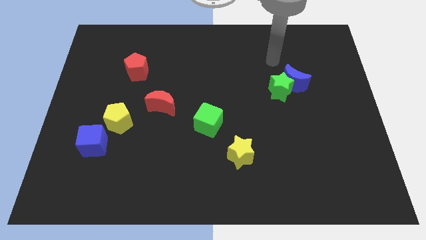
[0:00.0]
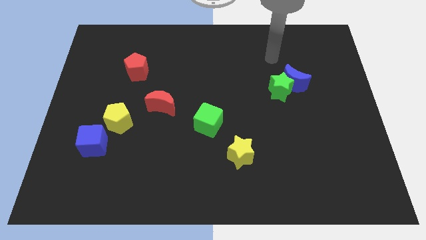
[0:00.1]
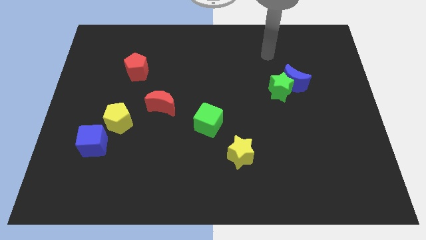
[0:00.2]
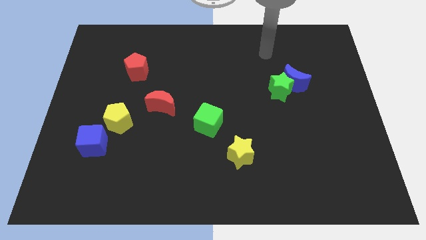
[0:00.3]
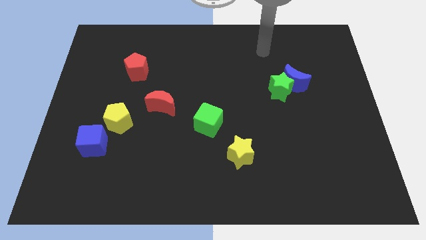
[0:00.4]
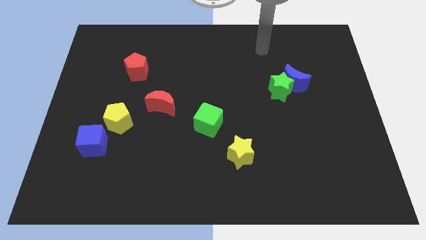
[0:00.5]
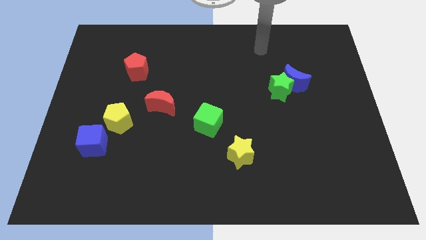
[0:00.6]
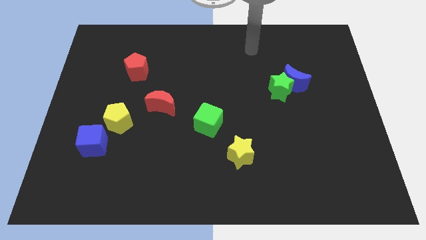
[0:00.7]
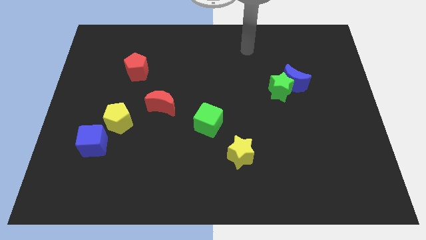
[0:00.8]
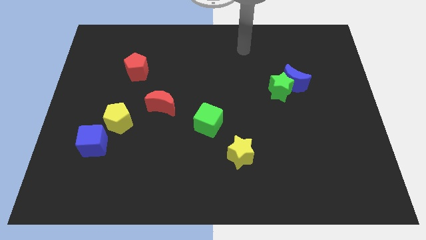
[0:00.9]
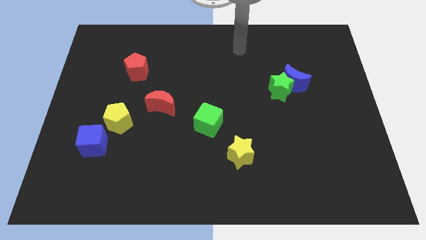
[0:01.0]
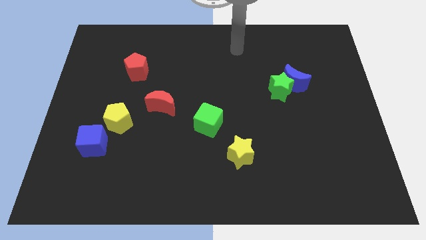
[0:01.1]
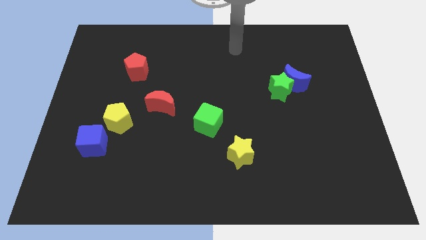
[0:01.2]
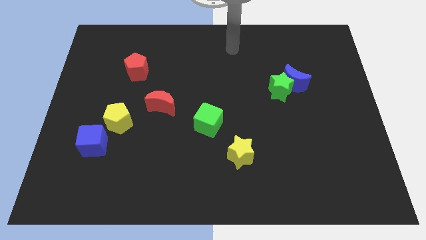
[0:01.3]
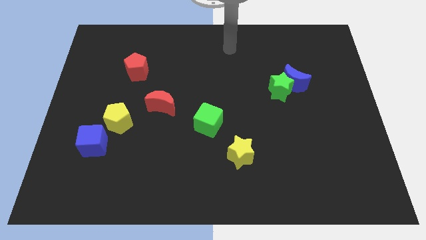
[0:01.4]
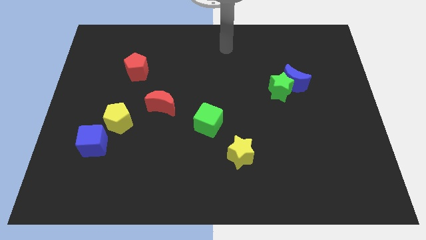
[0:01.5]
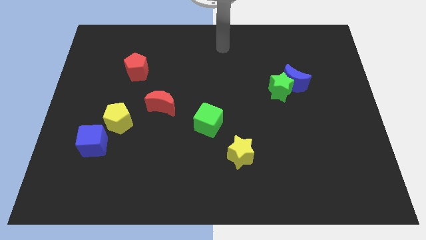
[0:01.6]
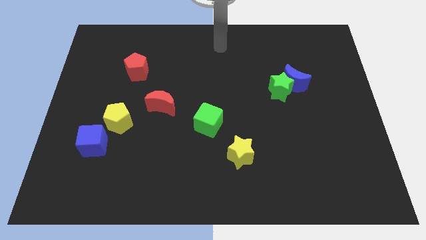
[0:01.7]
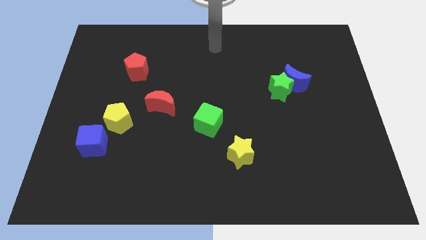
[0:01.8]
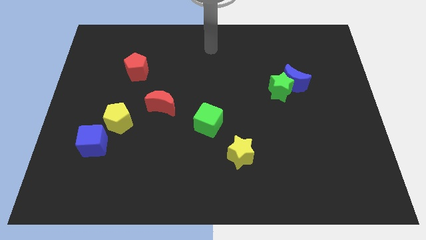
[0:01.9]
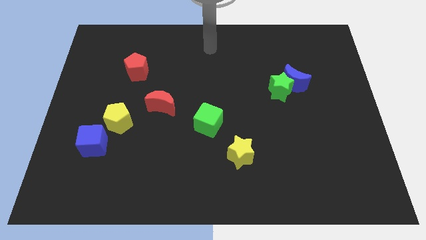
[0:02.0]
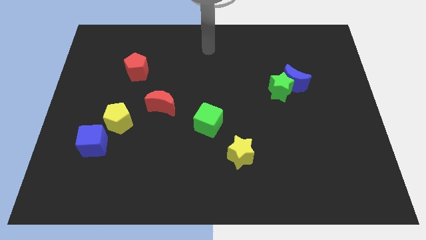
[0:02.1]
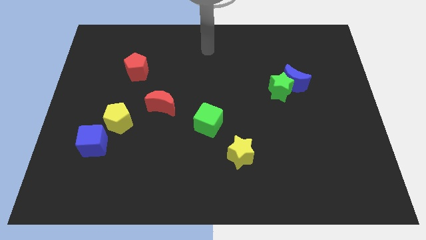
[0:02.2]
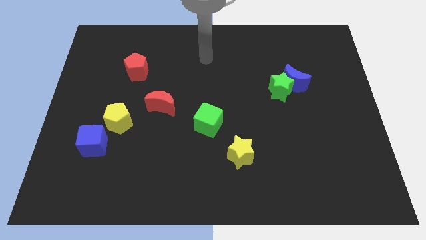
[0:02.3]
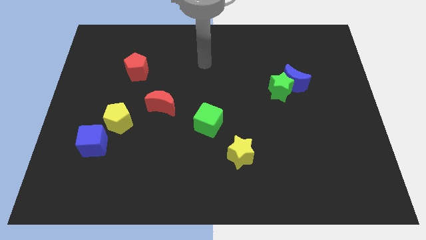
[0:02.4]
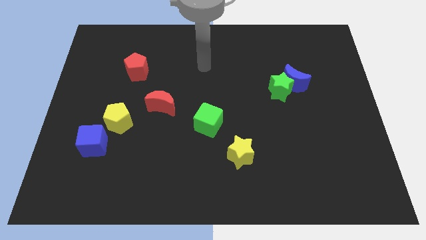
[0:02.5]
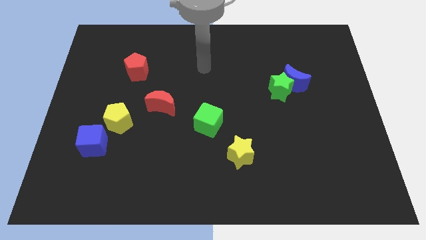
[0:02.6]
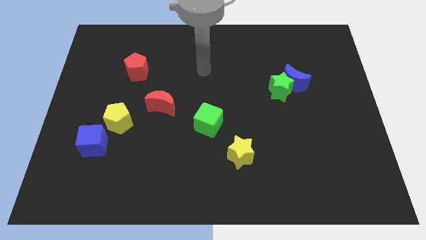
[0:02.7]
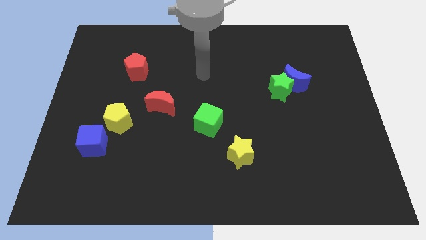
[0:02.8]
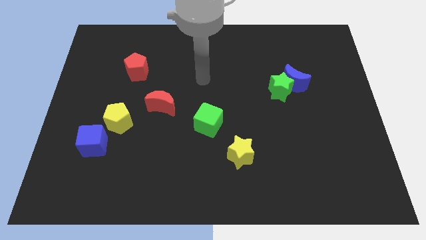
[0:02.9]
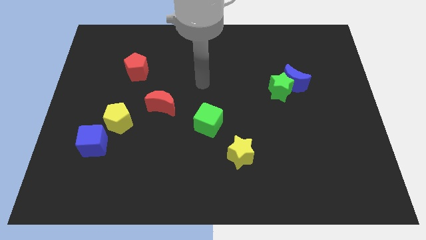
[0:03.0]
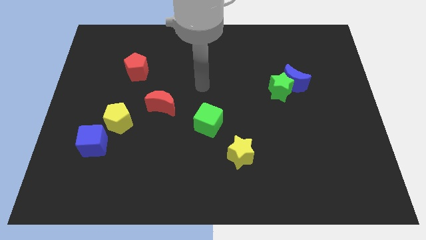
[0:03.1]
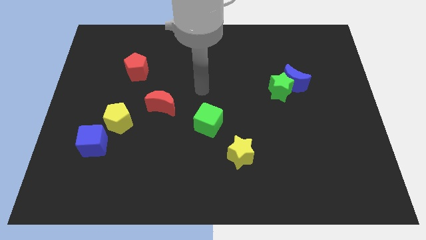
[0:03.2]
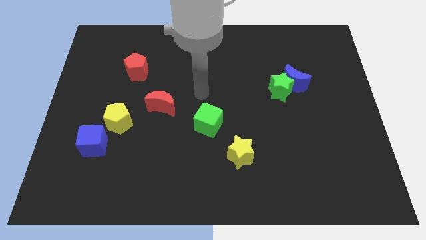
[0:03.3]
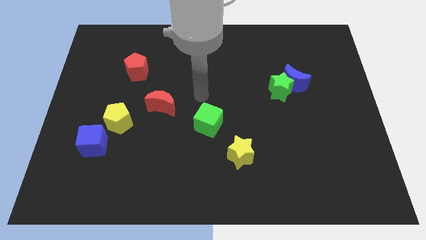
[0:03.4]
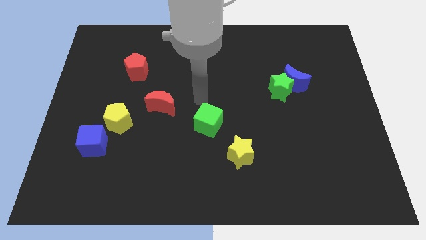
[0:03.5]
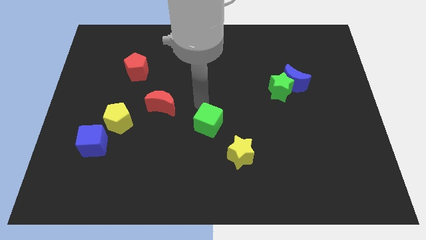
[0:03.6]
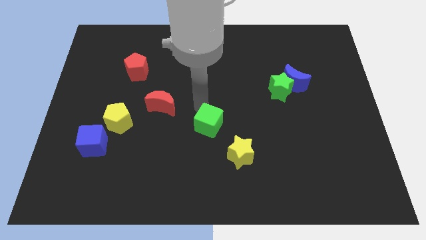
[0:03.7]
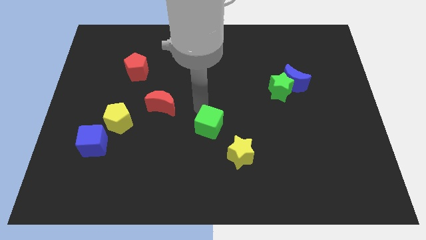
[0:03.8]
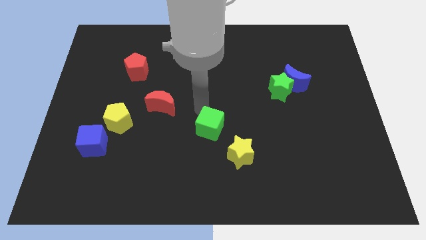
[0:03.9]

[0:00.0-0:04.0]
place your arm at the top of green cube

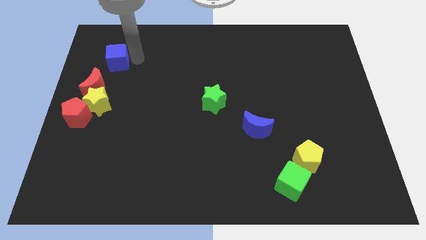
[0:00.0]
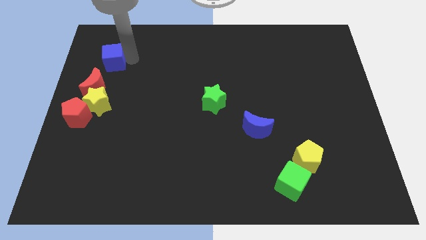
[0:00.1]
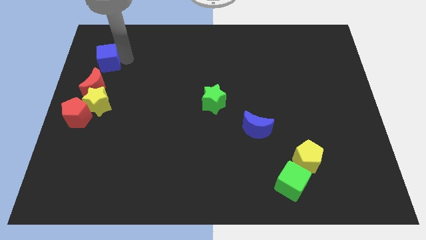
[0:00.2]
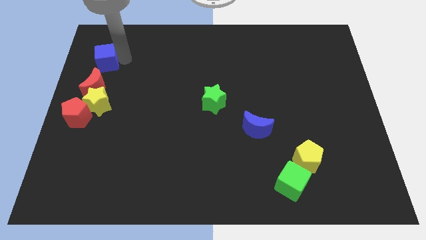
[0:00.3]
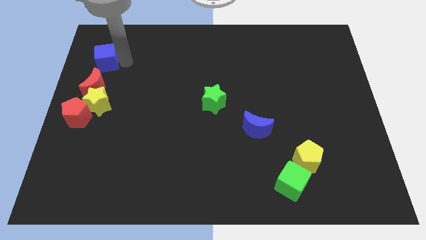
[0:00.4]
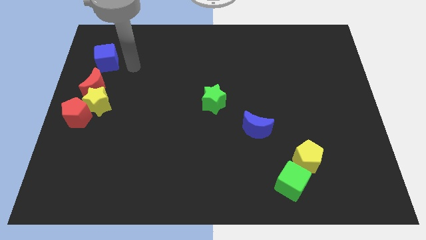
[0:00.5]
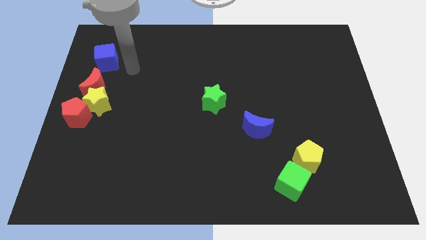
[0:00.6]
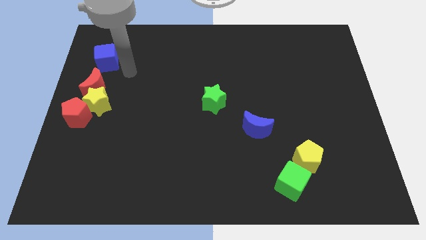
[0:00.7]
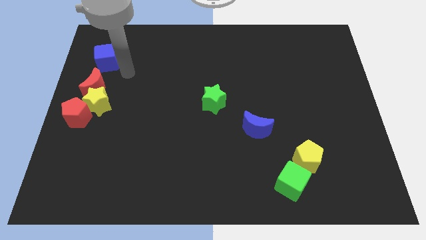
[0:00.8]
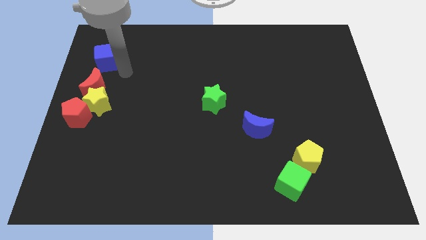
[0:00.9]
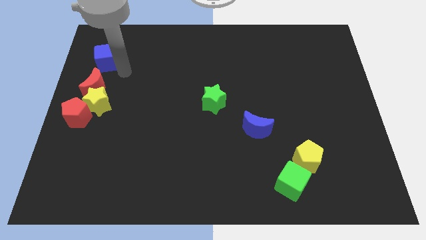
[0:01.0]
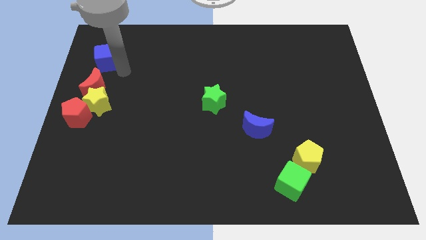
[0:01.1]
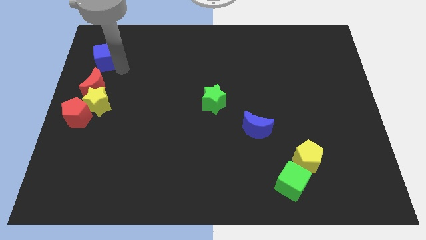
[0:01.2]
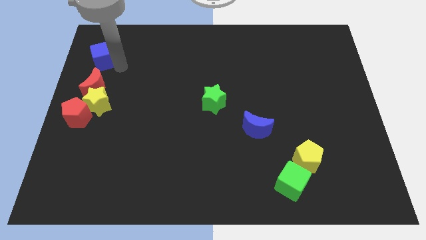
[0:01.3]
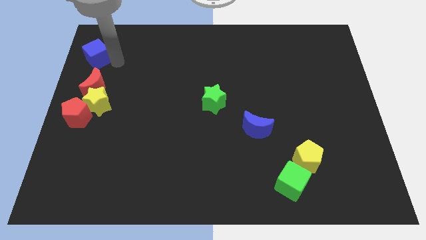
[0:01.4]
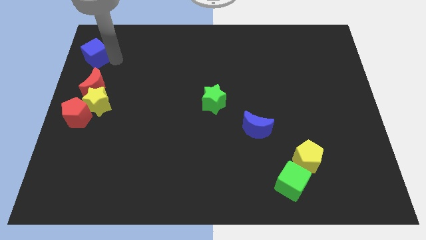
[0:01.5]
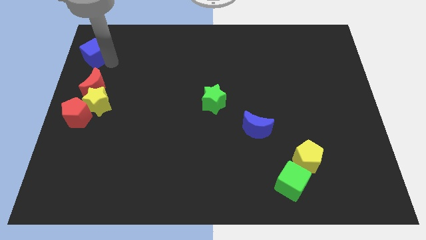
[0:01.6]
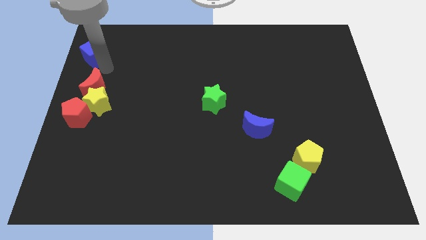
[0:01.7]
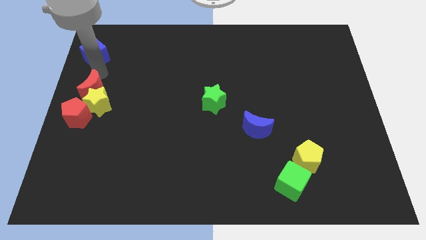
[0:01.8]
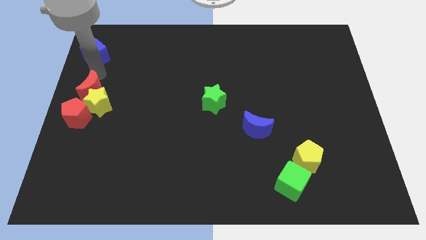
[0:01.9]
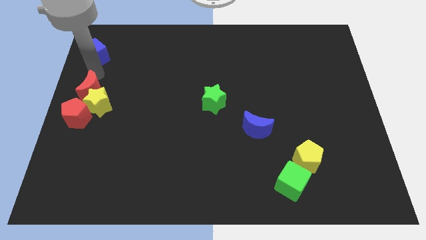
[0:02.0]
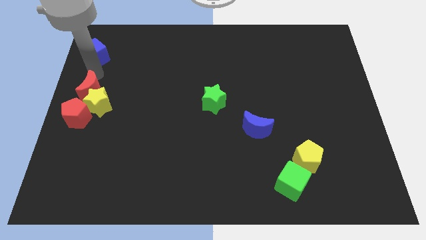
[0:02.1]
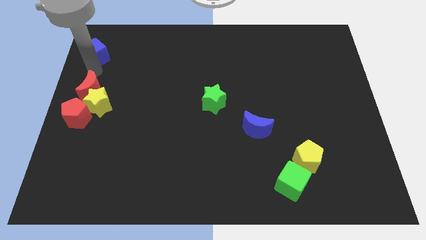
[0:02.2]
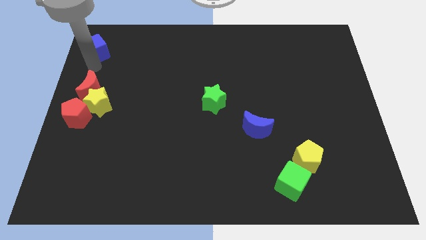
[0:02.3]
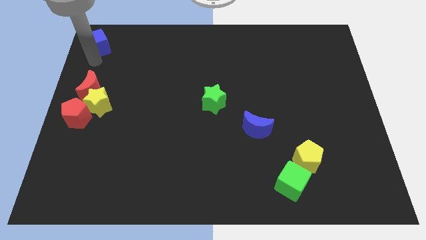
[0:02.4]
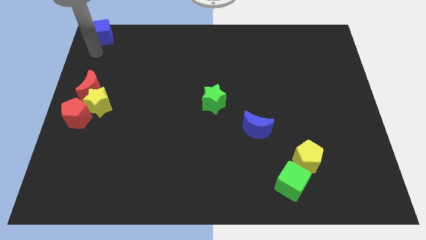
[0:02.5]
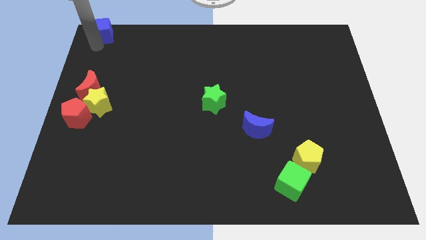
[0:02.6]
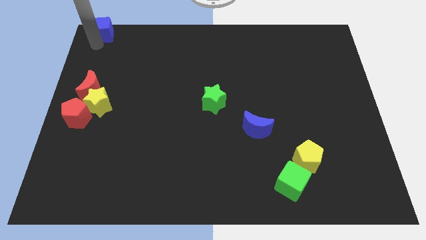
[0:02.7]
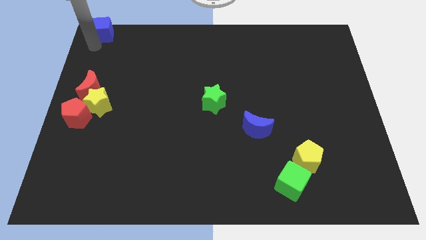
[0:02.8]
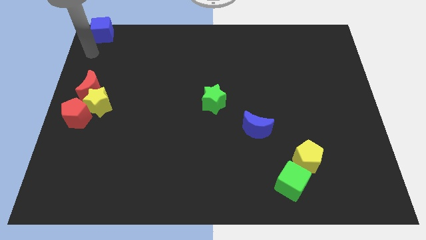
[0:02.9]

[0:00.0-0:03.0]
place the blue cube at the top left corner of the board

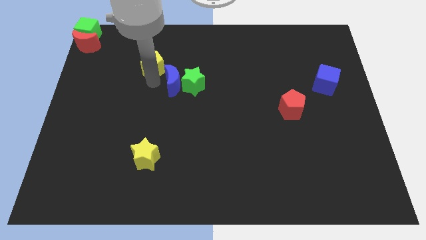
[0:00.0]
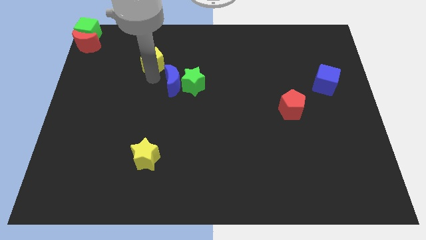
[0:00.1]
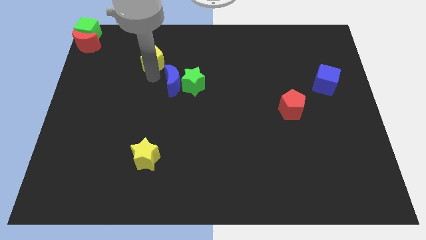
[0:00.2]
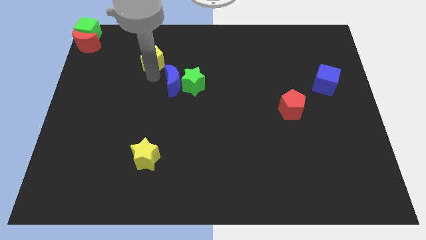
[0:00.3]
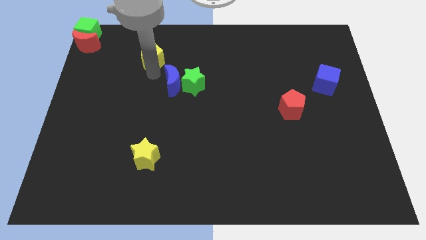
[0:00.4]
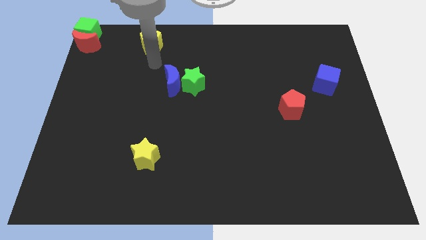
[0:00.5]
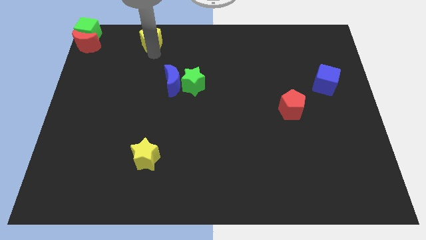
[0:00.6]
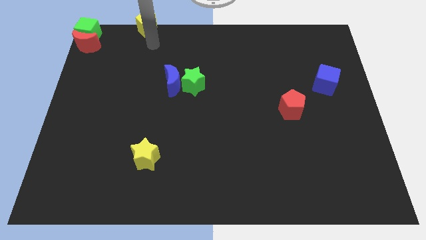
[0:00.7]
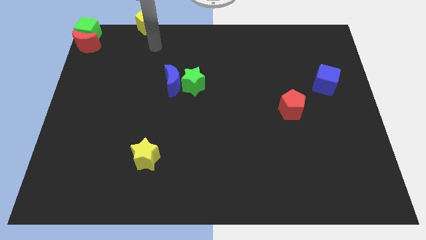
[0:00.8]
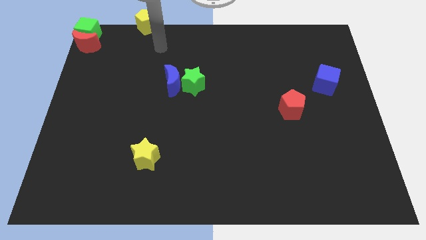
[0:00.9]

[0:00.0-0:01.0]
slide the yellow pentagon to the top left

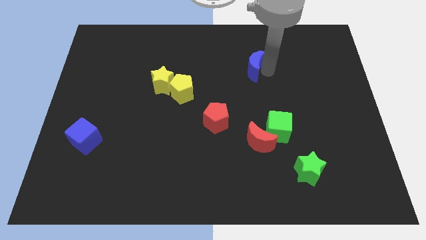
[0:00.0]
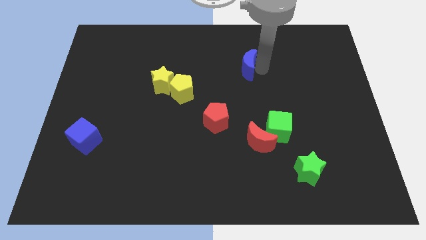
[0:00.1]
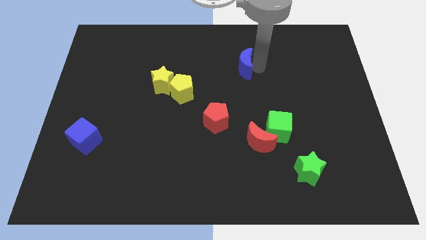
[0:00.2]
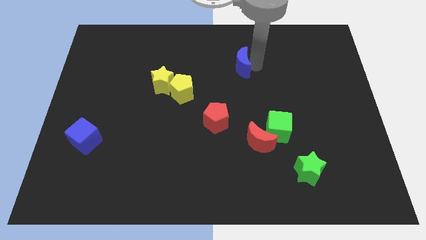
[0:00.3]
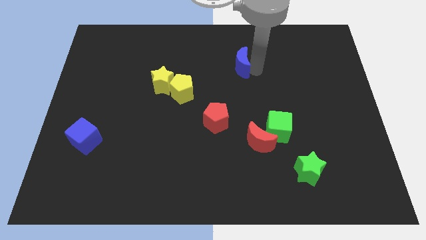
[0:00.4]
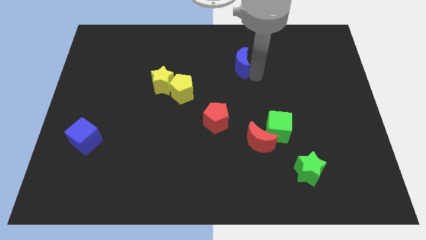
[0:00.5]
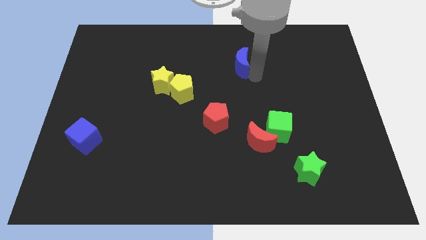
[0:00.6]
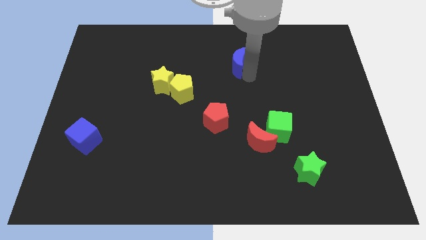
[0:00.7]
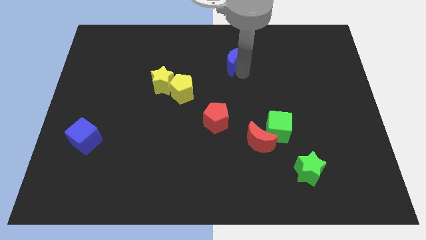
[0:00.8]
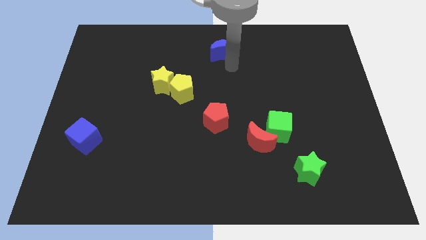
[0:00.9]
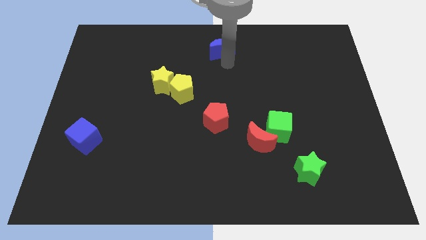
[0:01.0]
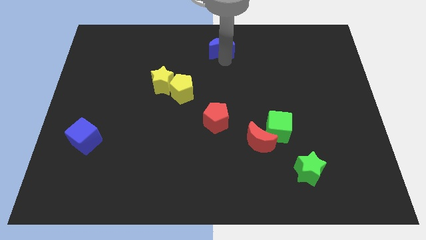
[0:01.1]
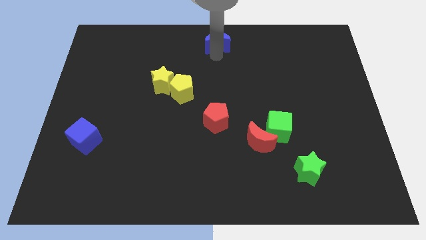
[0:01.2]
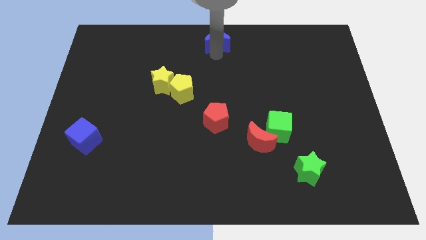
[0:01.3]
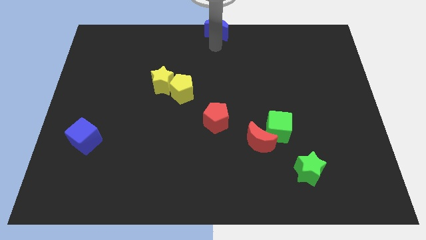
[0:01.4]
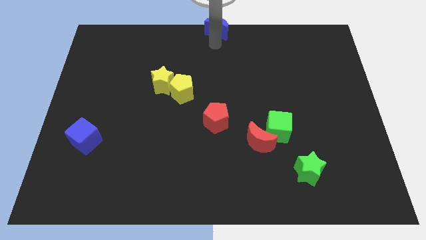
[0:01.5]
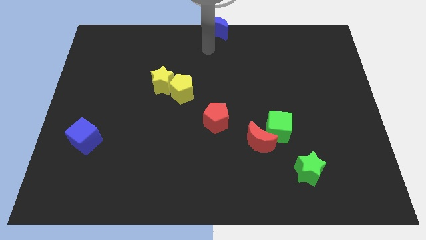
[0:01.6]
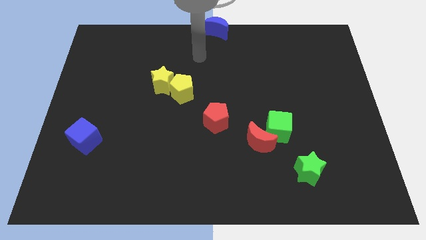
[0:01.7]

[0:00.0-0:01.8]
place the blue crescent to the top center of the board
